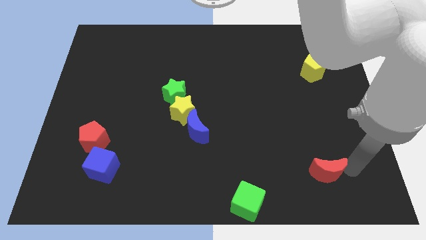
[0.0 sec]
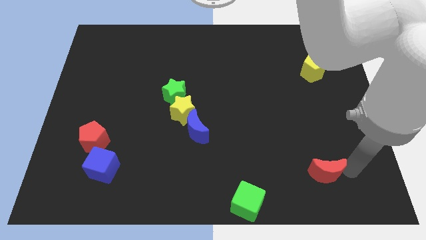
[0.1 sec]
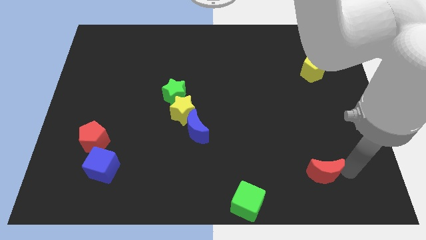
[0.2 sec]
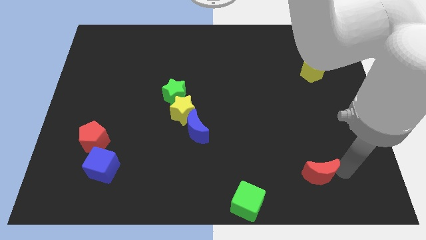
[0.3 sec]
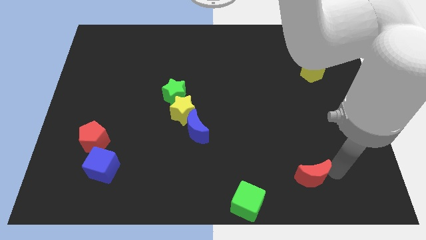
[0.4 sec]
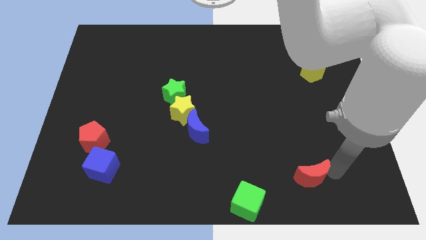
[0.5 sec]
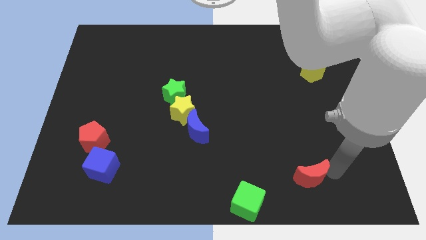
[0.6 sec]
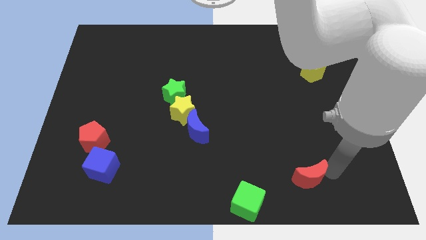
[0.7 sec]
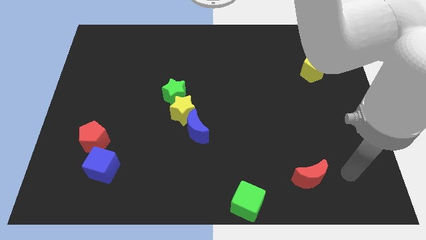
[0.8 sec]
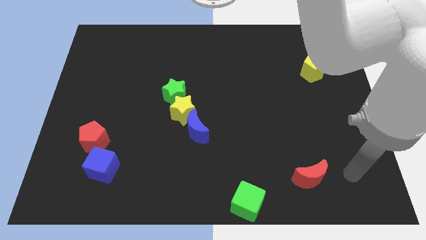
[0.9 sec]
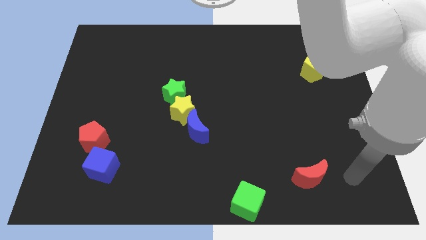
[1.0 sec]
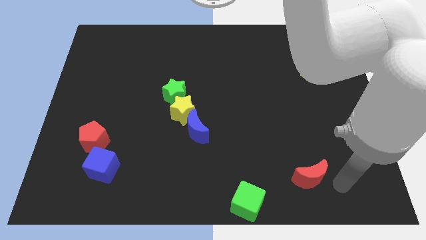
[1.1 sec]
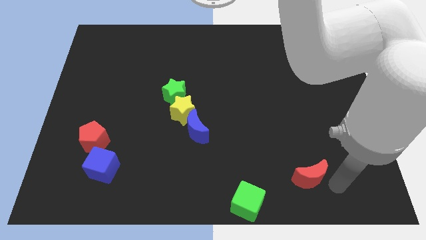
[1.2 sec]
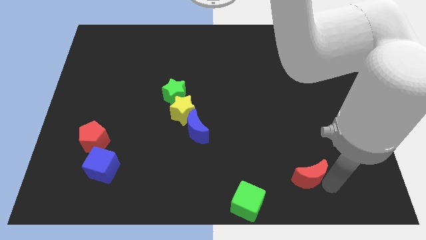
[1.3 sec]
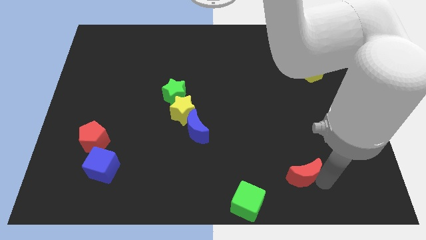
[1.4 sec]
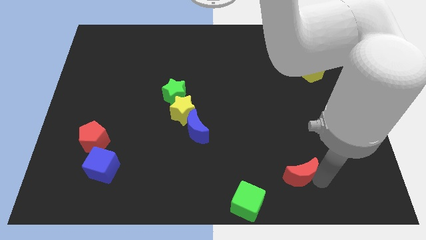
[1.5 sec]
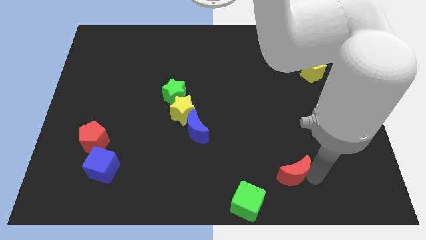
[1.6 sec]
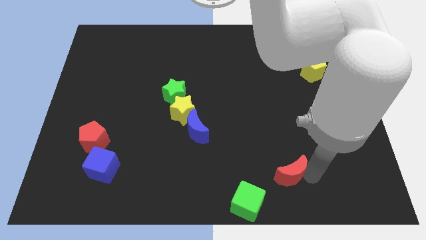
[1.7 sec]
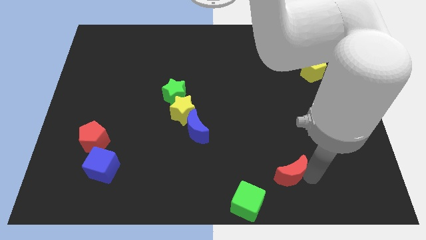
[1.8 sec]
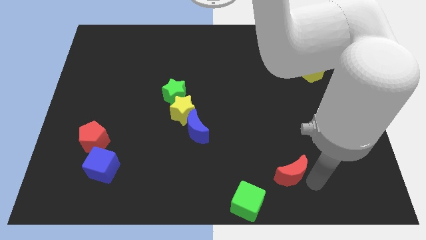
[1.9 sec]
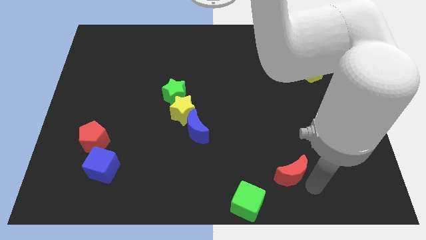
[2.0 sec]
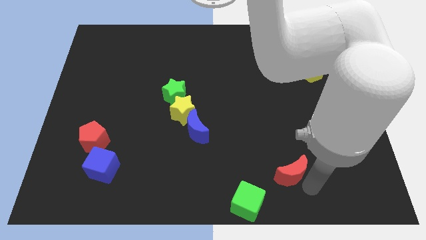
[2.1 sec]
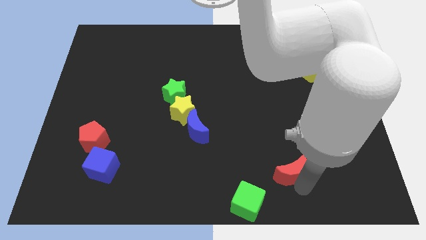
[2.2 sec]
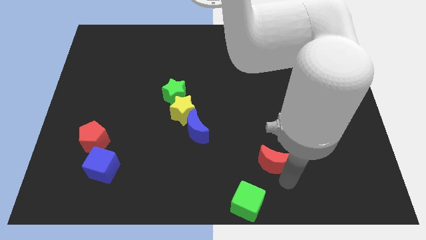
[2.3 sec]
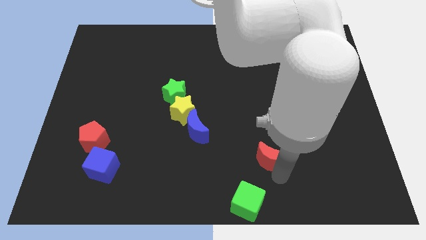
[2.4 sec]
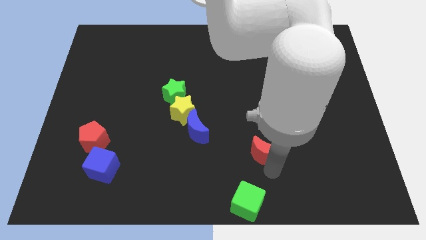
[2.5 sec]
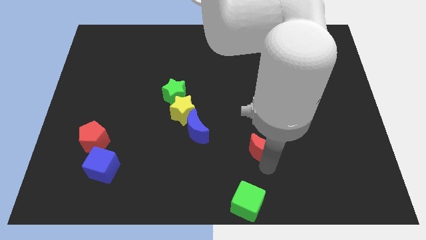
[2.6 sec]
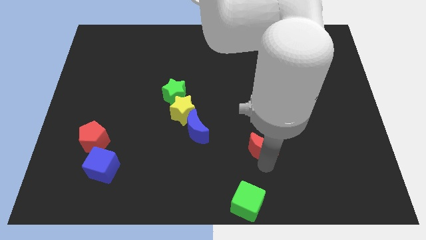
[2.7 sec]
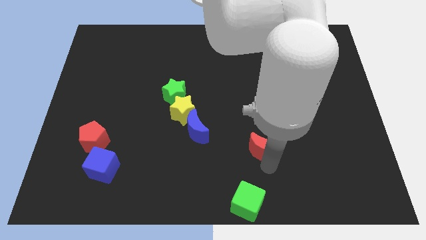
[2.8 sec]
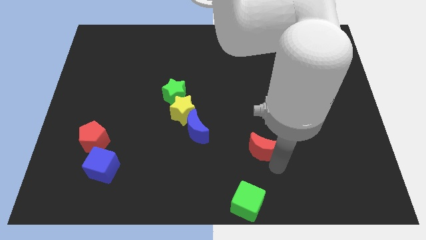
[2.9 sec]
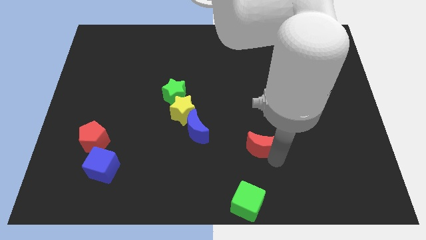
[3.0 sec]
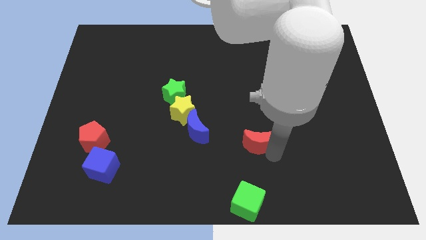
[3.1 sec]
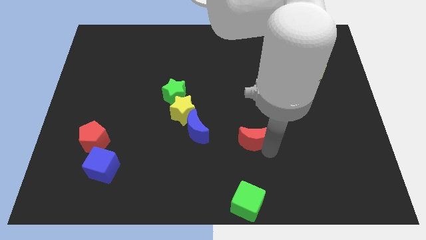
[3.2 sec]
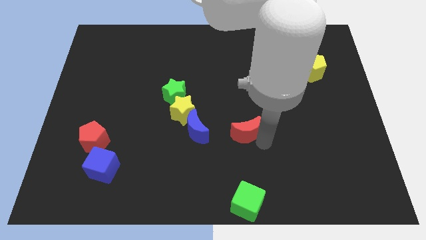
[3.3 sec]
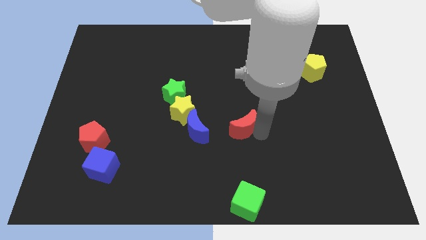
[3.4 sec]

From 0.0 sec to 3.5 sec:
move the red crescent to the top of the green cube

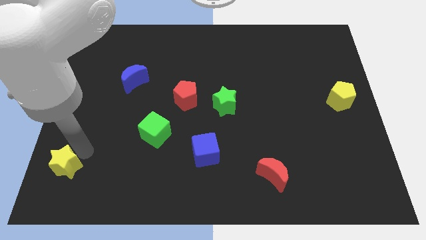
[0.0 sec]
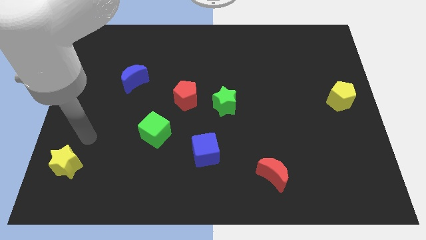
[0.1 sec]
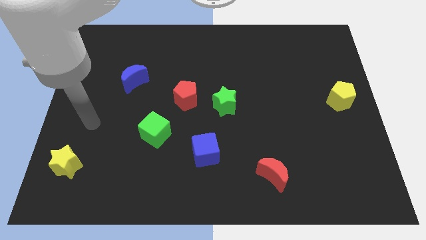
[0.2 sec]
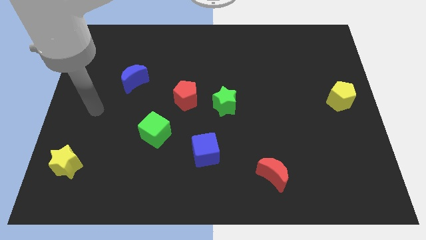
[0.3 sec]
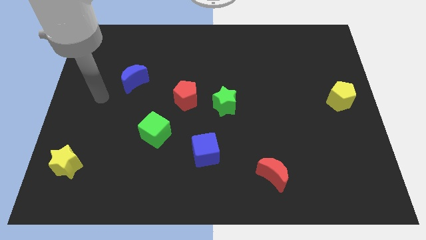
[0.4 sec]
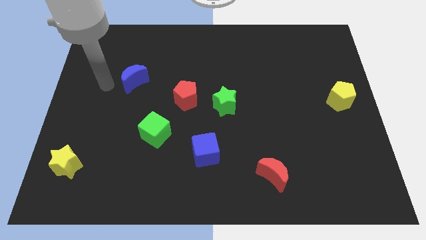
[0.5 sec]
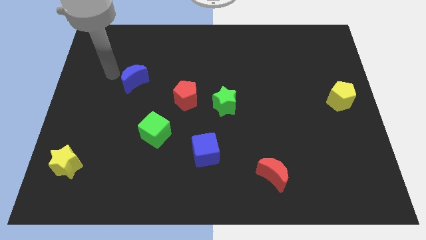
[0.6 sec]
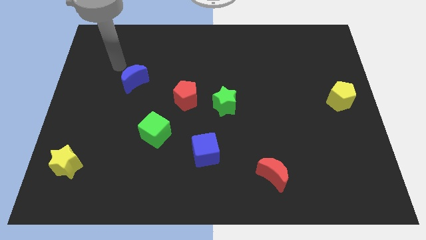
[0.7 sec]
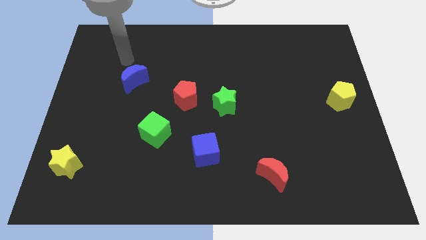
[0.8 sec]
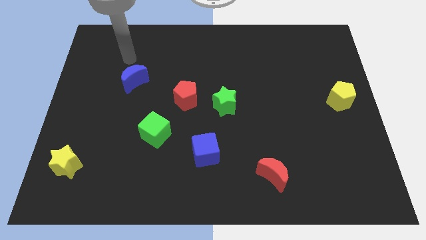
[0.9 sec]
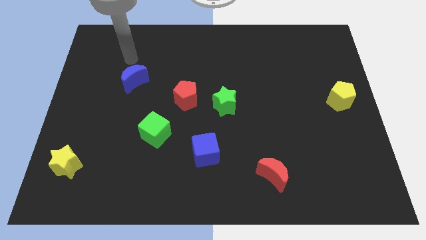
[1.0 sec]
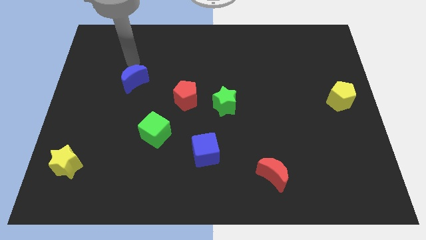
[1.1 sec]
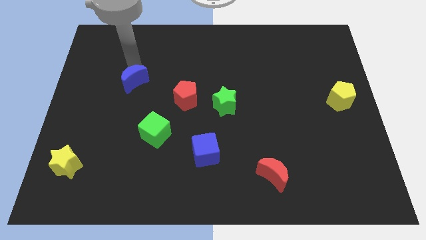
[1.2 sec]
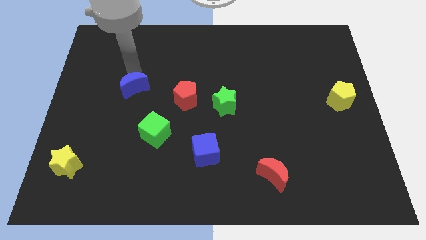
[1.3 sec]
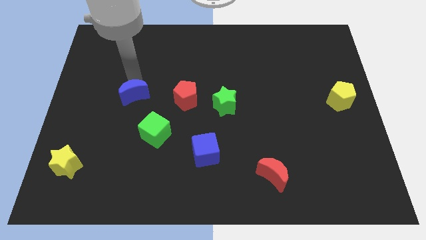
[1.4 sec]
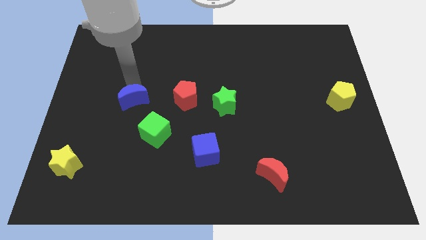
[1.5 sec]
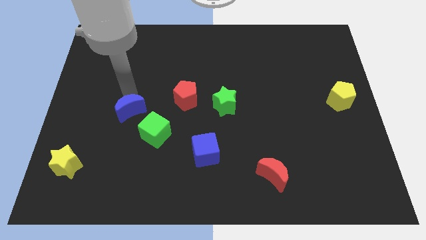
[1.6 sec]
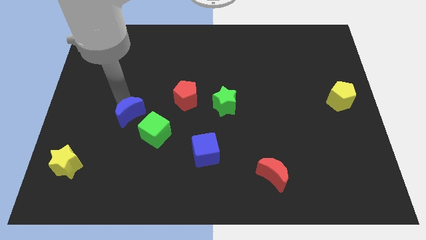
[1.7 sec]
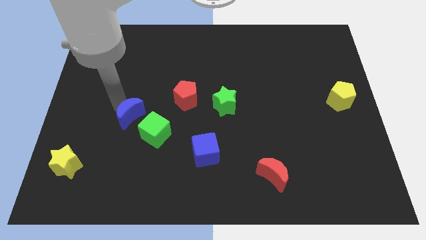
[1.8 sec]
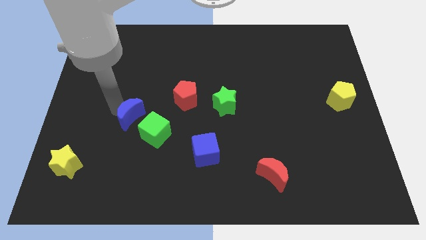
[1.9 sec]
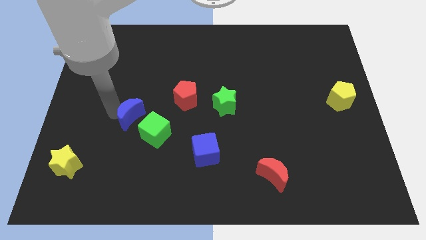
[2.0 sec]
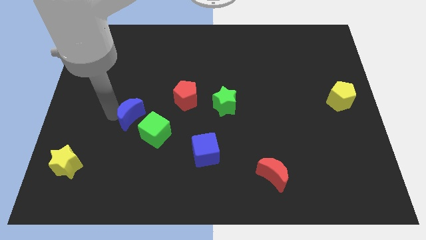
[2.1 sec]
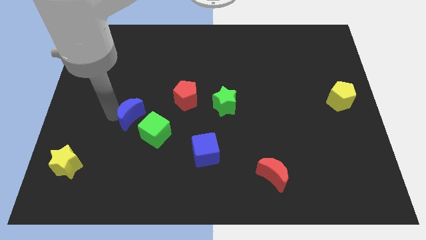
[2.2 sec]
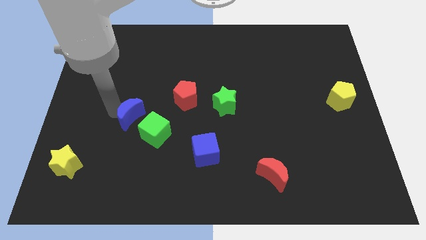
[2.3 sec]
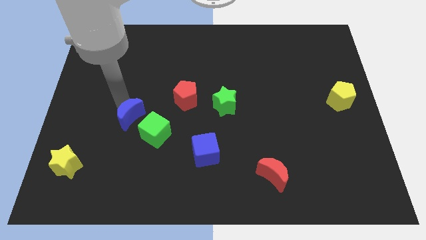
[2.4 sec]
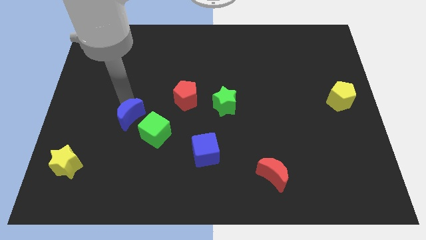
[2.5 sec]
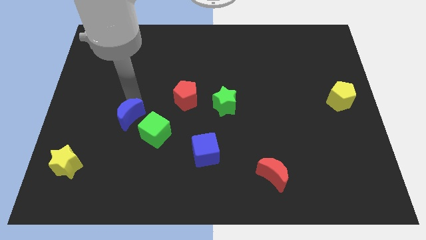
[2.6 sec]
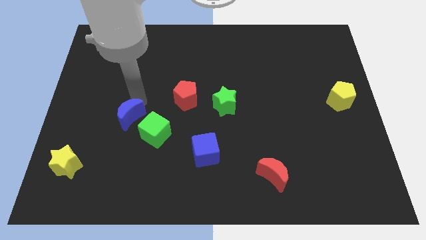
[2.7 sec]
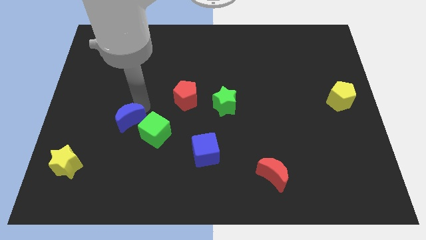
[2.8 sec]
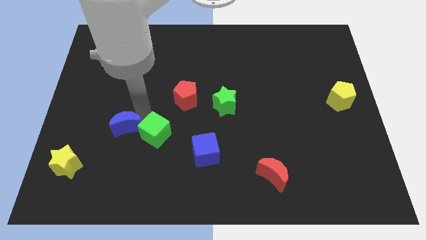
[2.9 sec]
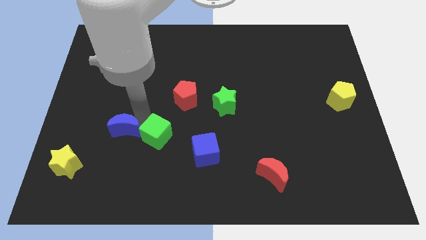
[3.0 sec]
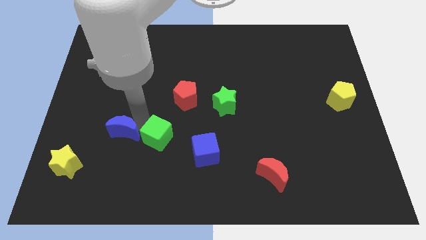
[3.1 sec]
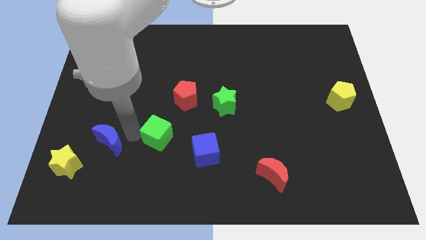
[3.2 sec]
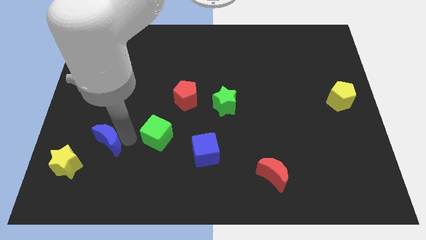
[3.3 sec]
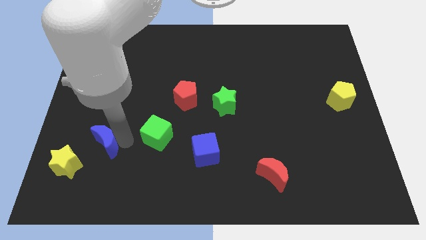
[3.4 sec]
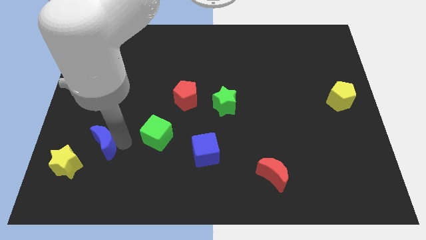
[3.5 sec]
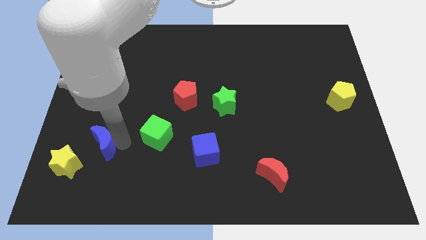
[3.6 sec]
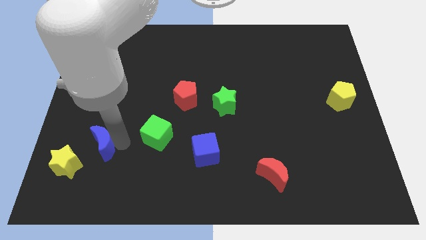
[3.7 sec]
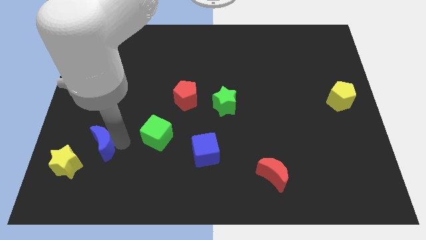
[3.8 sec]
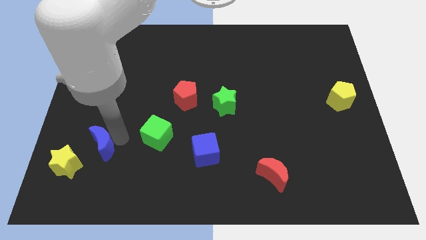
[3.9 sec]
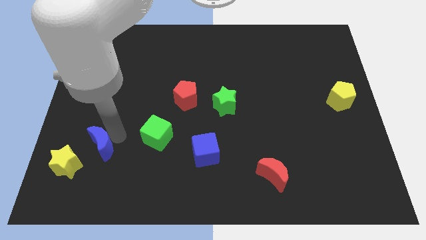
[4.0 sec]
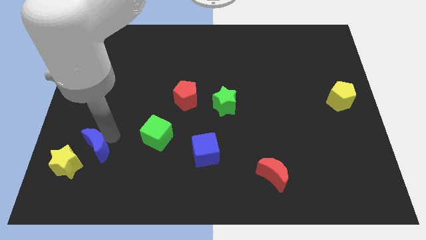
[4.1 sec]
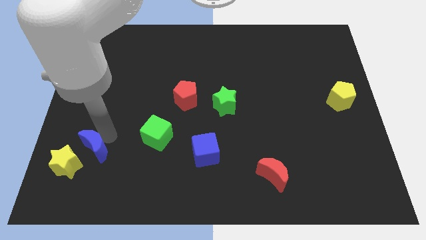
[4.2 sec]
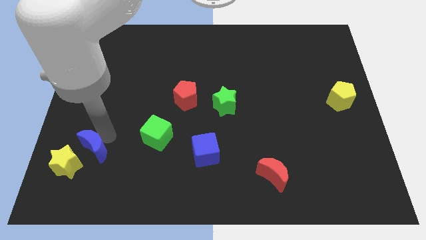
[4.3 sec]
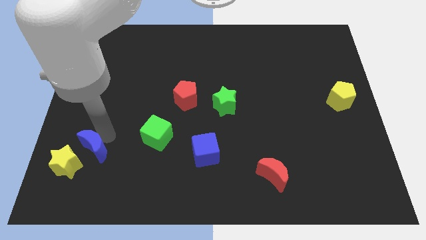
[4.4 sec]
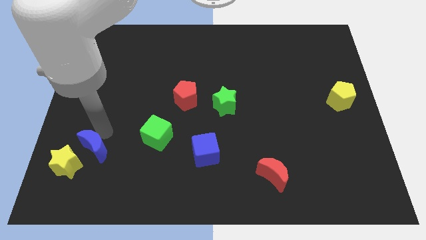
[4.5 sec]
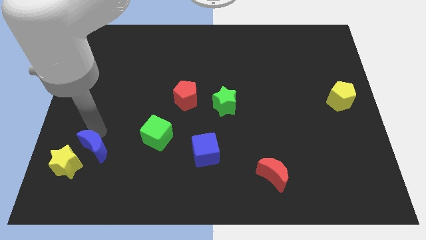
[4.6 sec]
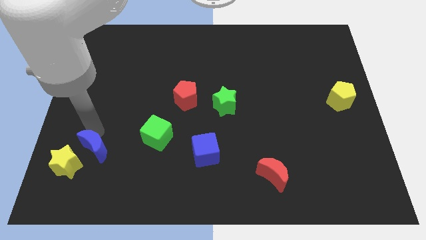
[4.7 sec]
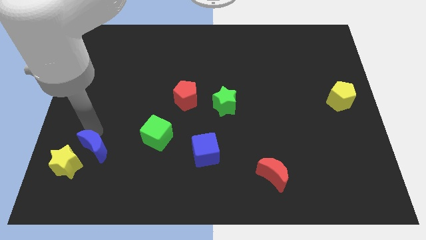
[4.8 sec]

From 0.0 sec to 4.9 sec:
move the blue crescent slightly towards the yellow star

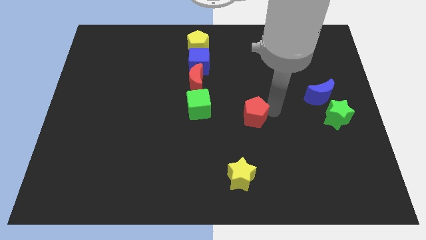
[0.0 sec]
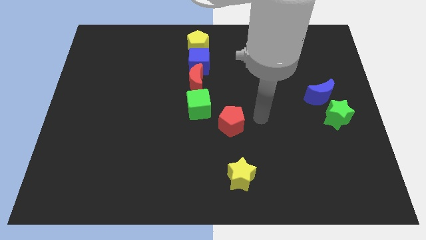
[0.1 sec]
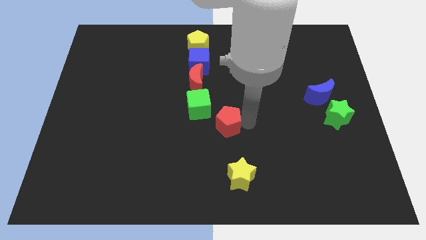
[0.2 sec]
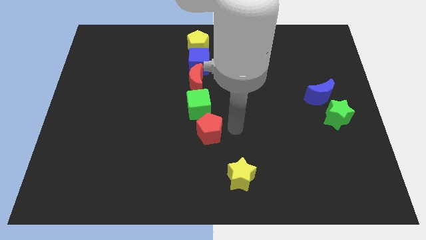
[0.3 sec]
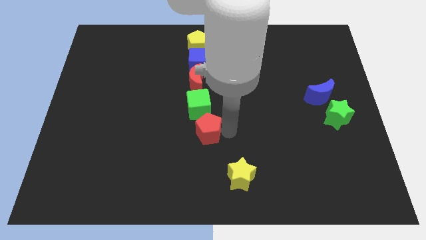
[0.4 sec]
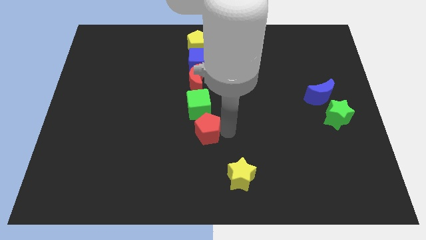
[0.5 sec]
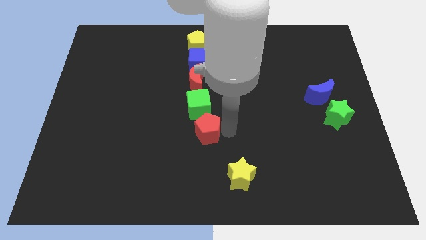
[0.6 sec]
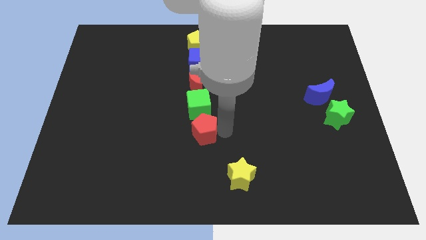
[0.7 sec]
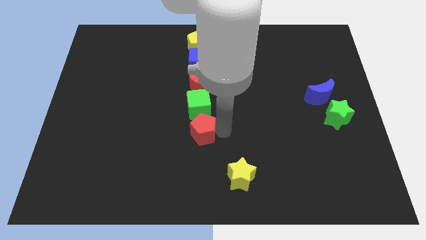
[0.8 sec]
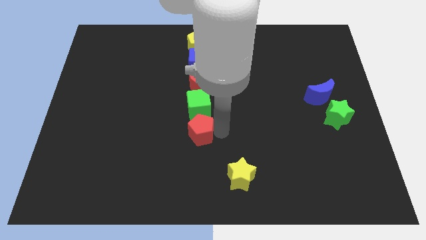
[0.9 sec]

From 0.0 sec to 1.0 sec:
place the red pentagon in between the green cube and yellow star
